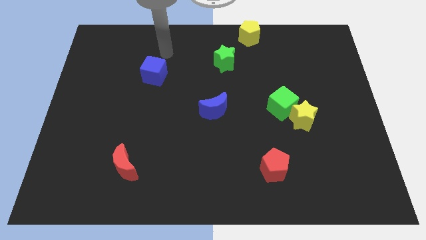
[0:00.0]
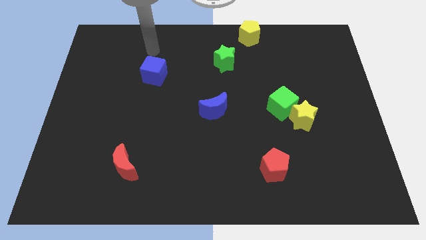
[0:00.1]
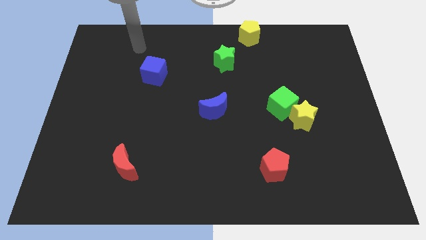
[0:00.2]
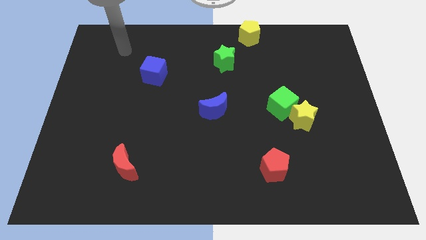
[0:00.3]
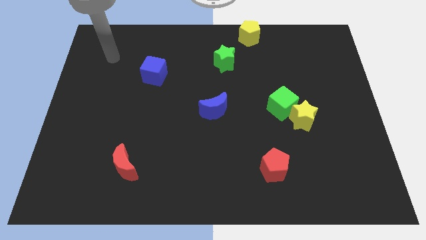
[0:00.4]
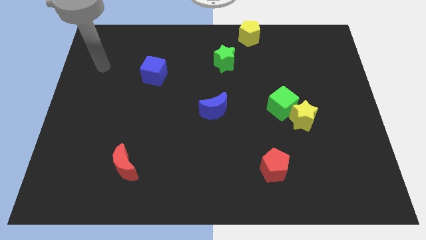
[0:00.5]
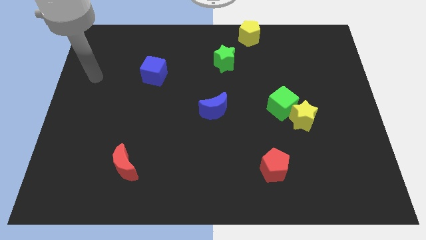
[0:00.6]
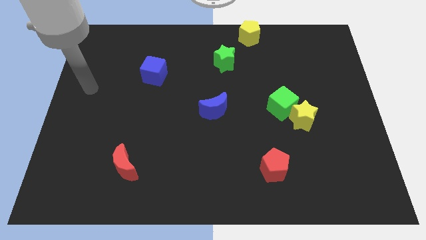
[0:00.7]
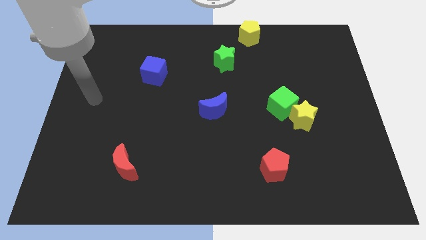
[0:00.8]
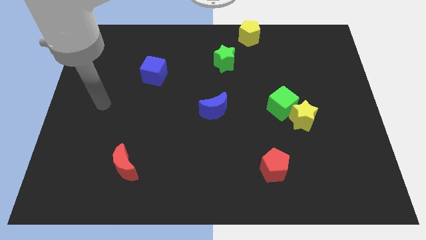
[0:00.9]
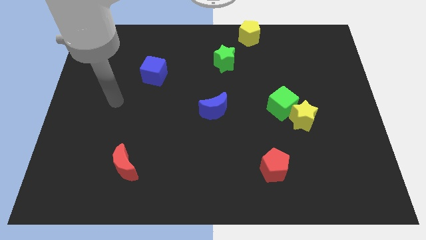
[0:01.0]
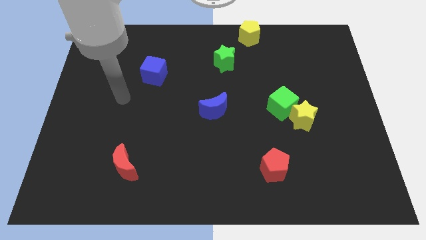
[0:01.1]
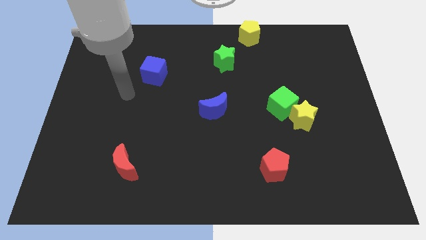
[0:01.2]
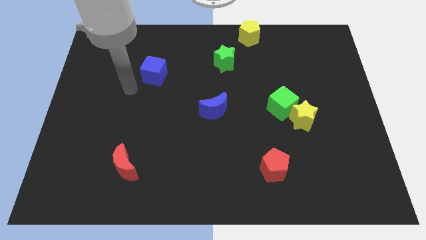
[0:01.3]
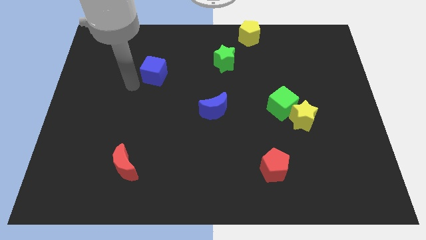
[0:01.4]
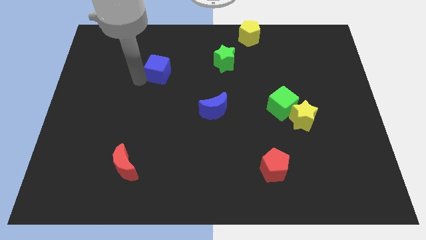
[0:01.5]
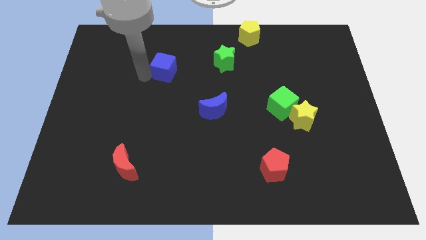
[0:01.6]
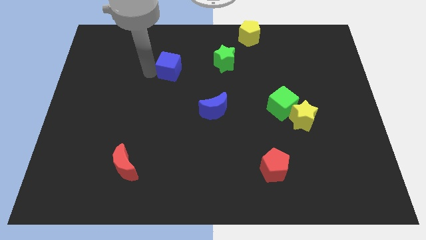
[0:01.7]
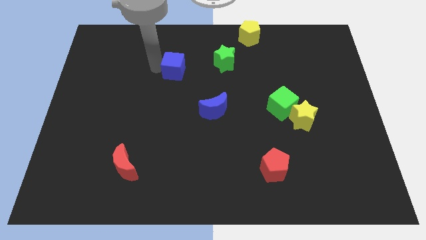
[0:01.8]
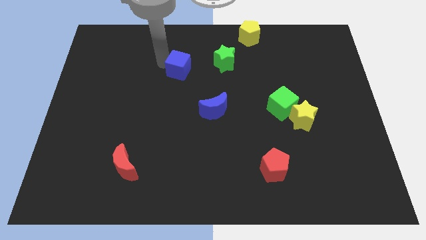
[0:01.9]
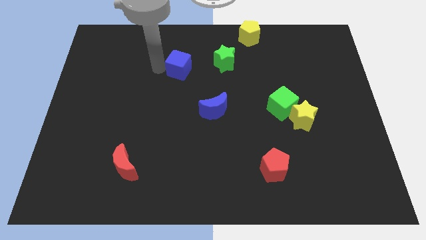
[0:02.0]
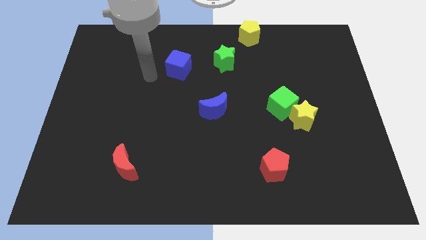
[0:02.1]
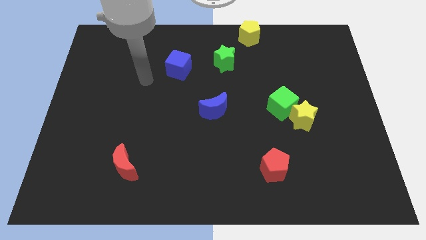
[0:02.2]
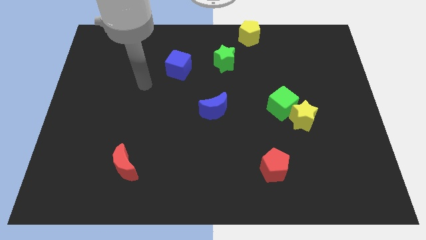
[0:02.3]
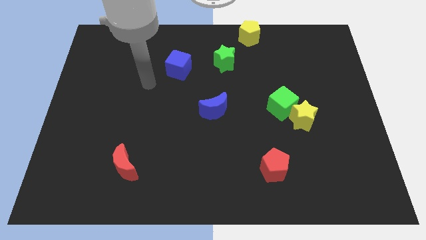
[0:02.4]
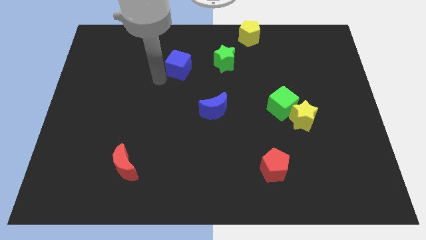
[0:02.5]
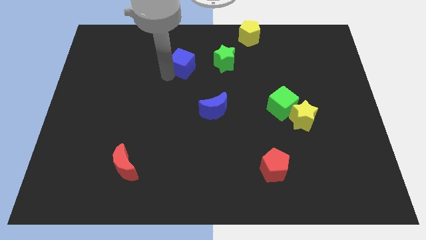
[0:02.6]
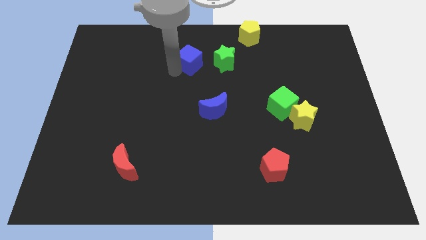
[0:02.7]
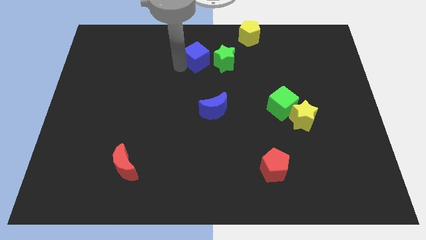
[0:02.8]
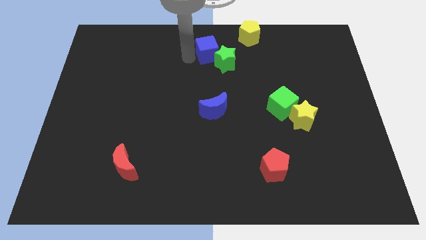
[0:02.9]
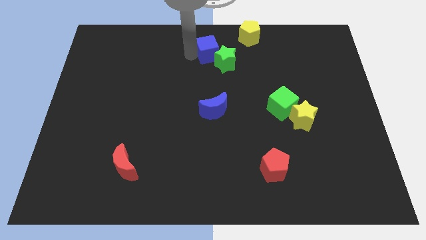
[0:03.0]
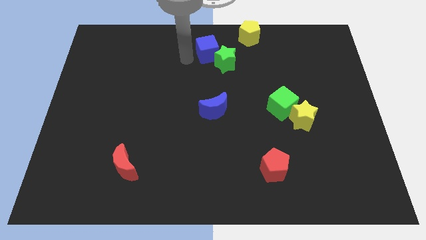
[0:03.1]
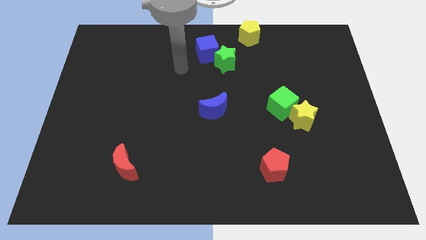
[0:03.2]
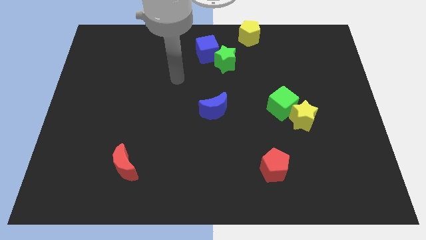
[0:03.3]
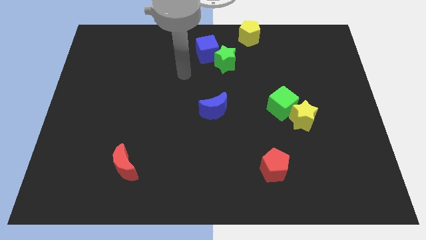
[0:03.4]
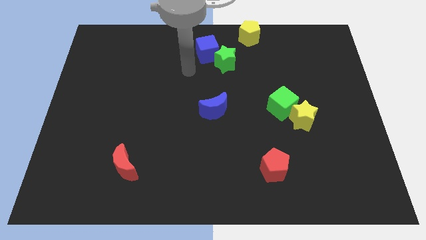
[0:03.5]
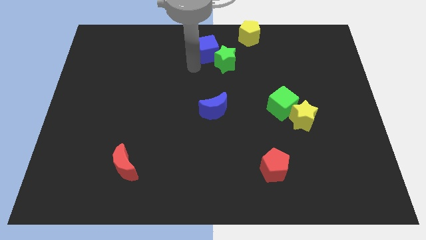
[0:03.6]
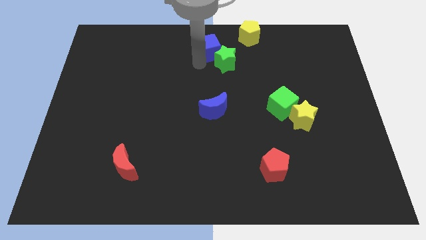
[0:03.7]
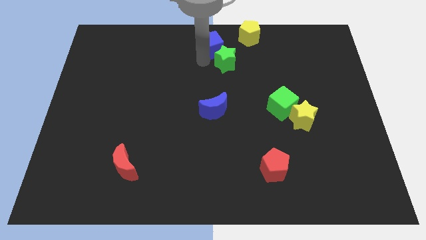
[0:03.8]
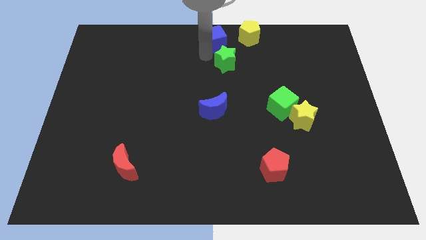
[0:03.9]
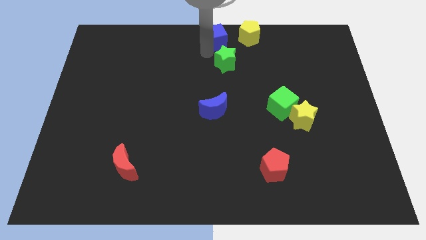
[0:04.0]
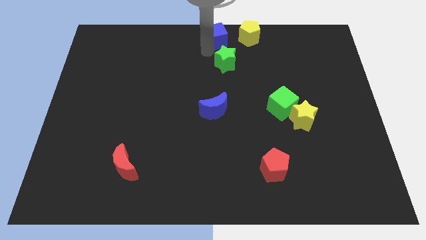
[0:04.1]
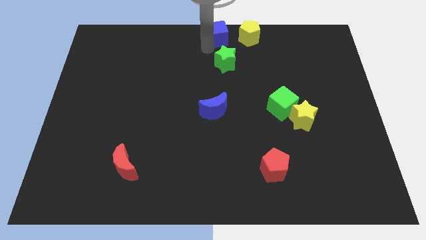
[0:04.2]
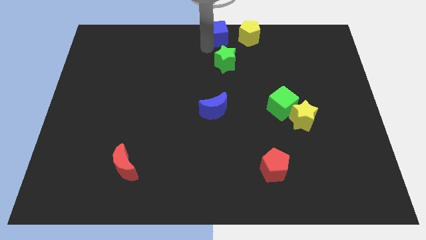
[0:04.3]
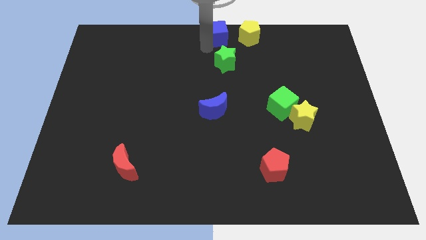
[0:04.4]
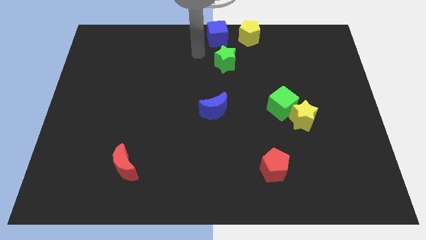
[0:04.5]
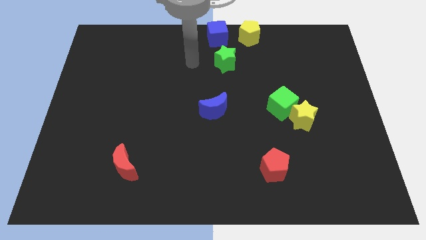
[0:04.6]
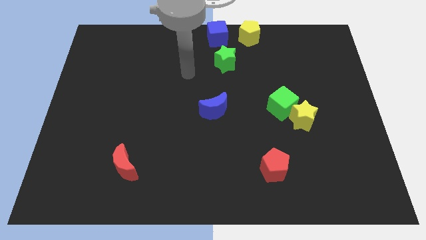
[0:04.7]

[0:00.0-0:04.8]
move the blue cube to the left of the yellow pentagon

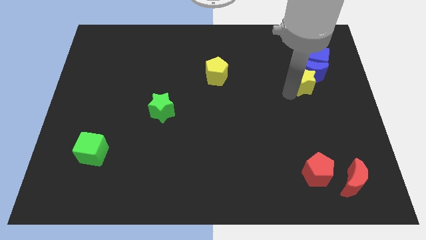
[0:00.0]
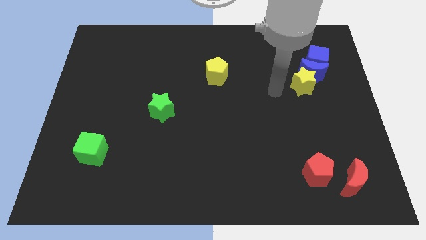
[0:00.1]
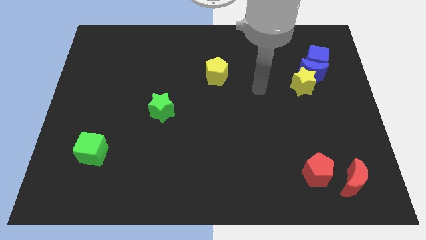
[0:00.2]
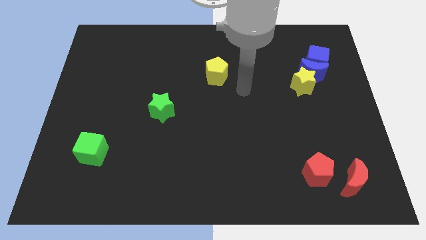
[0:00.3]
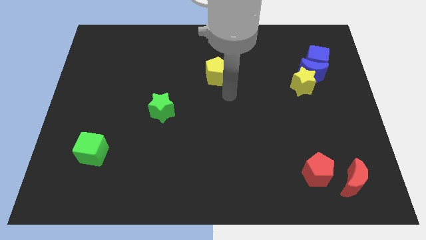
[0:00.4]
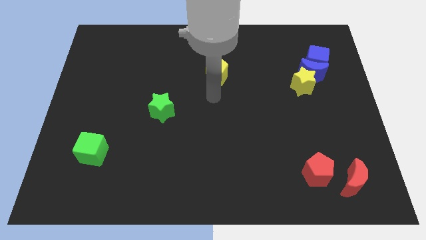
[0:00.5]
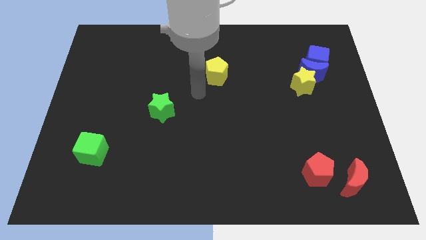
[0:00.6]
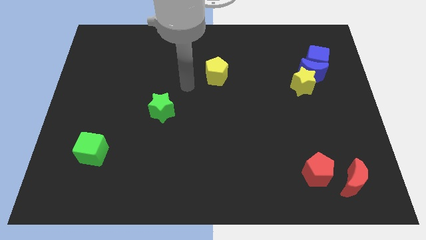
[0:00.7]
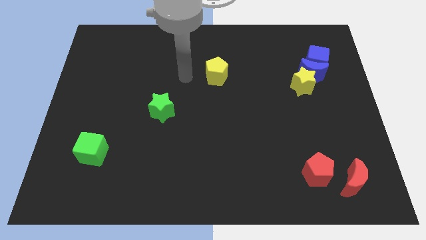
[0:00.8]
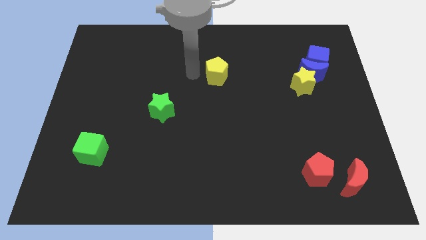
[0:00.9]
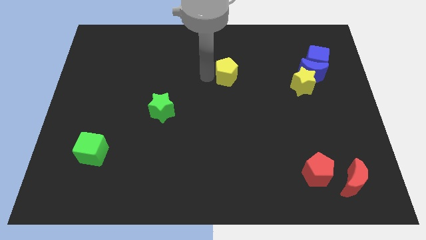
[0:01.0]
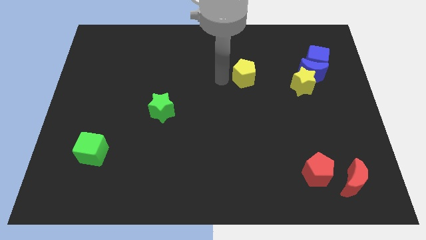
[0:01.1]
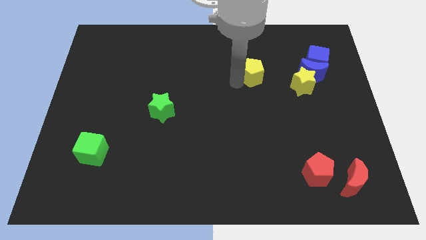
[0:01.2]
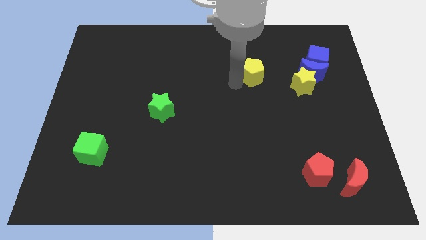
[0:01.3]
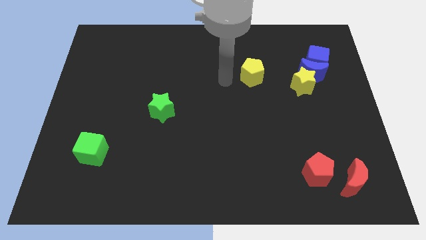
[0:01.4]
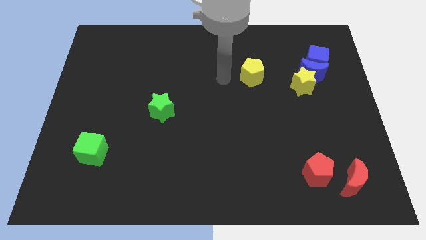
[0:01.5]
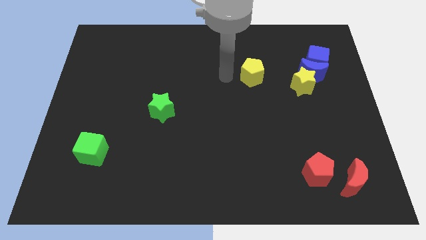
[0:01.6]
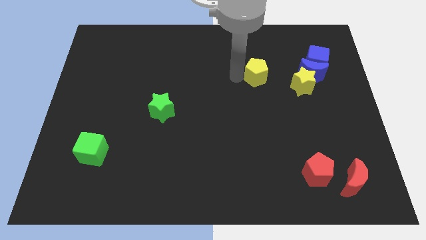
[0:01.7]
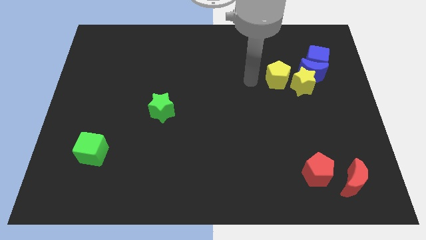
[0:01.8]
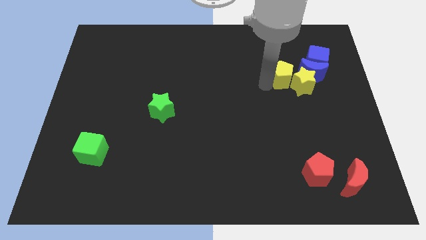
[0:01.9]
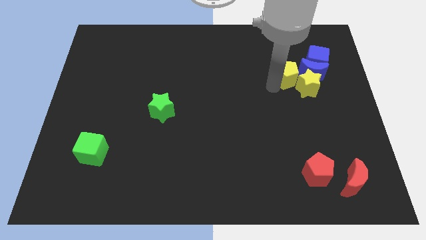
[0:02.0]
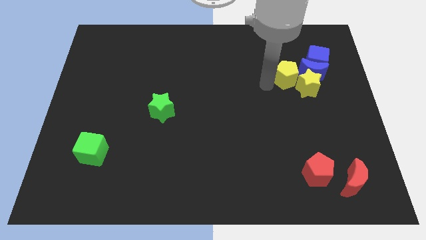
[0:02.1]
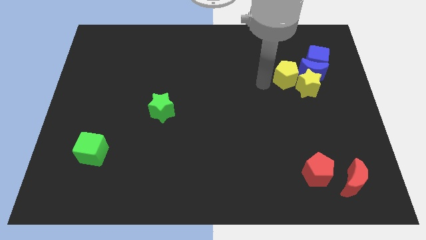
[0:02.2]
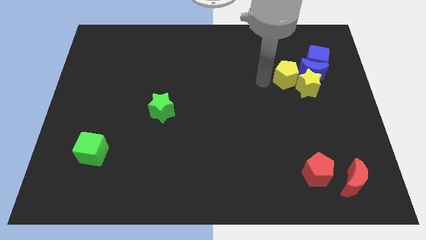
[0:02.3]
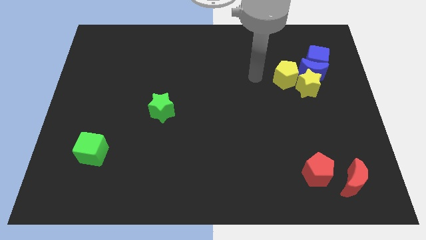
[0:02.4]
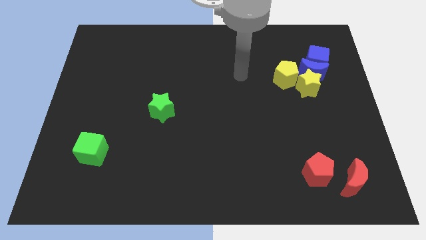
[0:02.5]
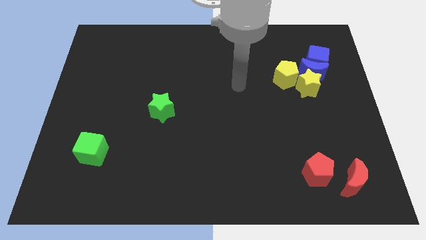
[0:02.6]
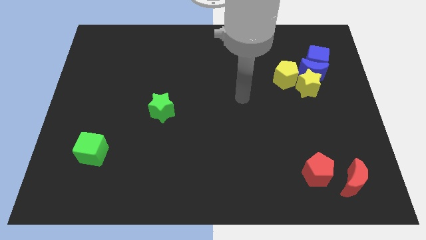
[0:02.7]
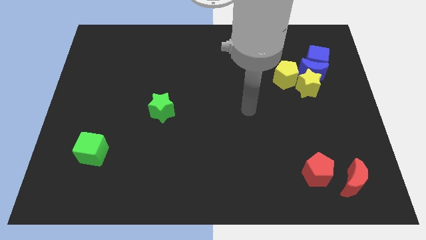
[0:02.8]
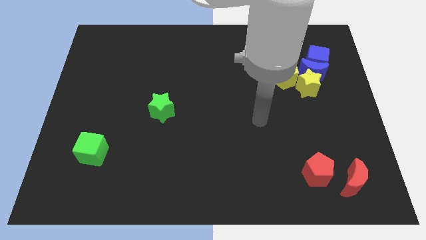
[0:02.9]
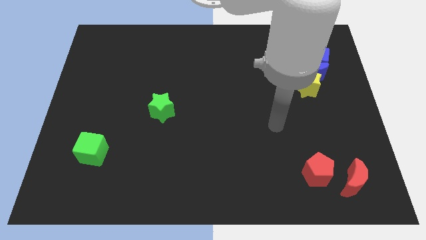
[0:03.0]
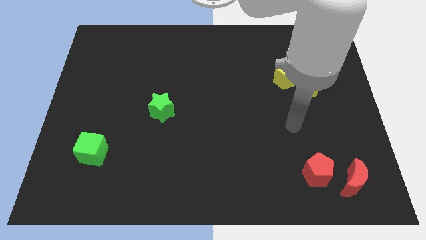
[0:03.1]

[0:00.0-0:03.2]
push the yellow pentagon into the yellow star

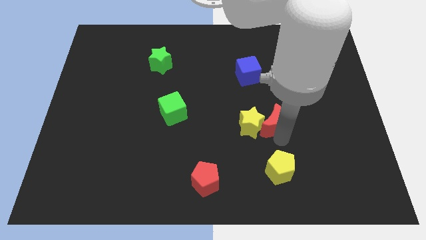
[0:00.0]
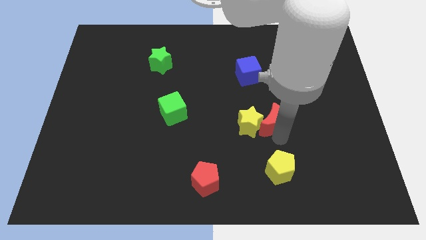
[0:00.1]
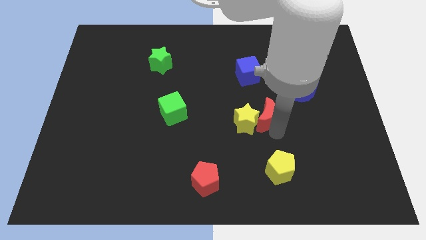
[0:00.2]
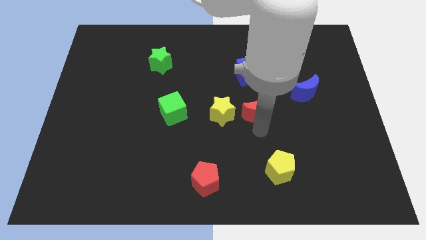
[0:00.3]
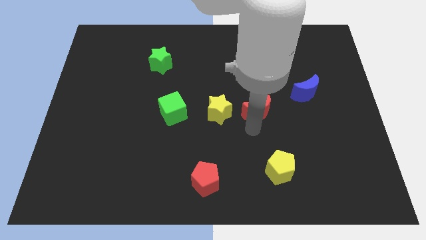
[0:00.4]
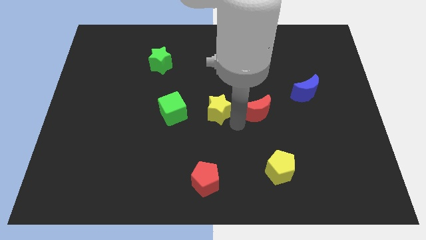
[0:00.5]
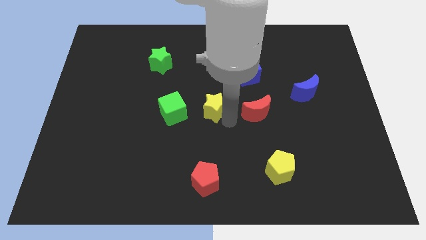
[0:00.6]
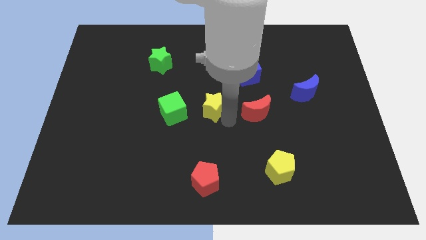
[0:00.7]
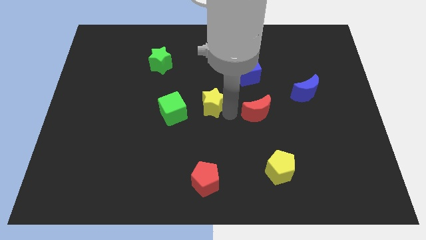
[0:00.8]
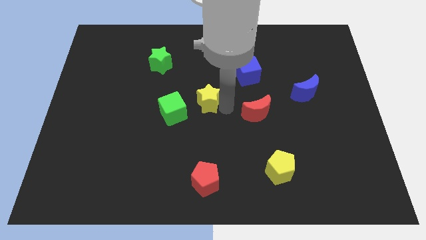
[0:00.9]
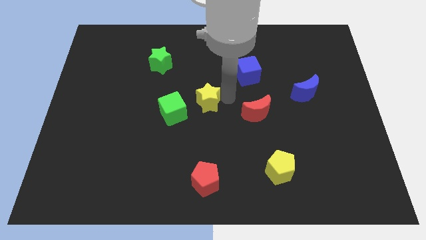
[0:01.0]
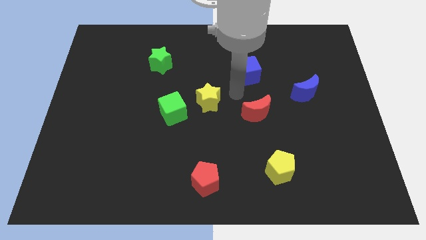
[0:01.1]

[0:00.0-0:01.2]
place red crescent below blue cube
